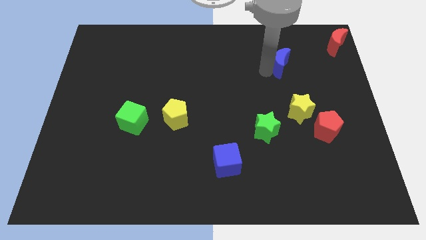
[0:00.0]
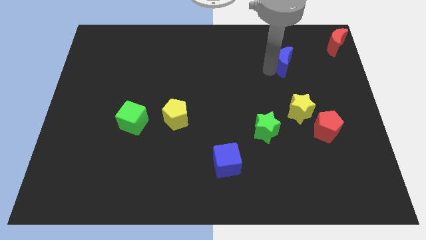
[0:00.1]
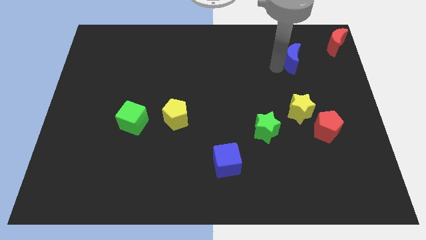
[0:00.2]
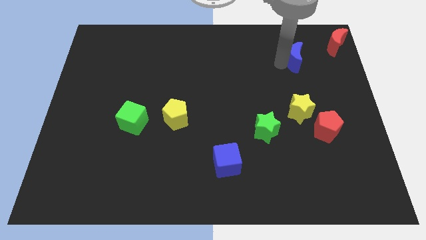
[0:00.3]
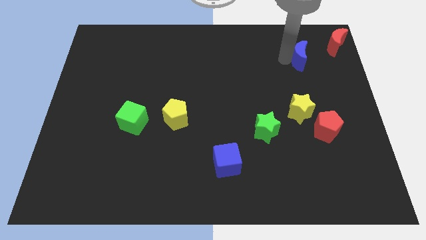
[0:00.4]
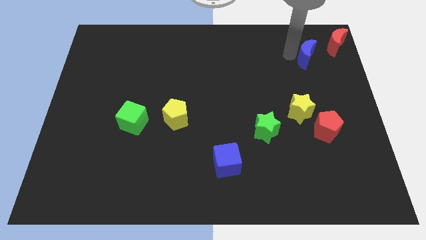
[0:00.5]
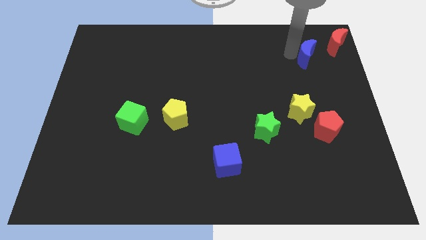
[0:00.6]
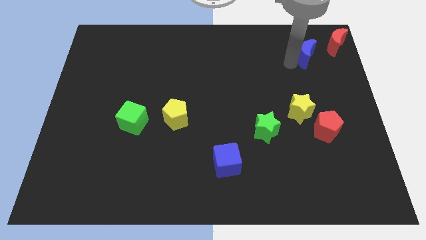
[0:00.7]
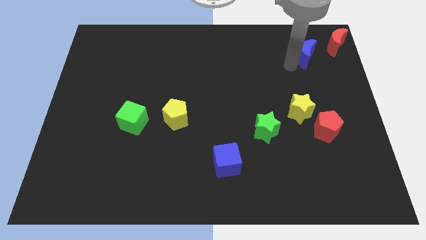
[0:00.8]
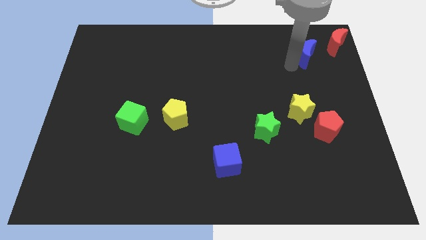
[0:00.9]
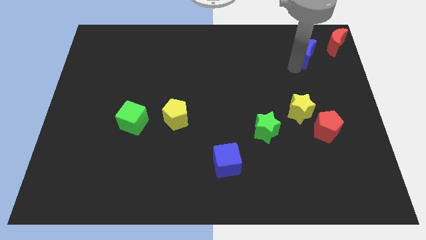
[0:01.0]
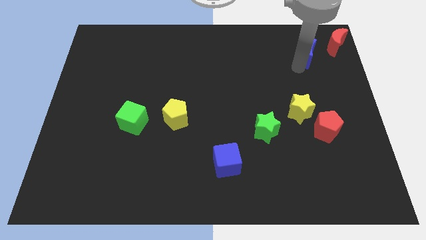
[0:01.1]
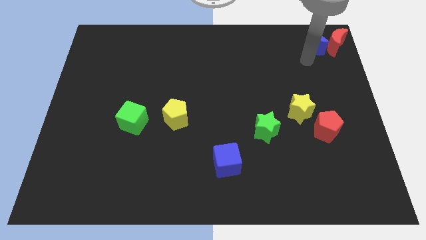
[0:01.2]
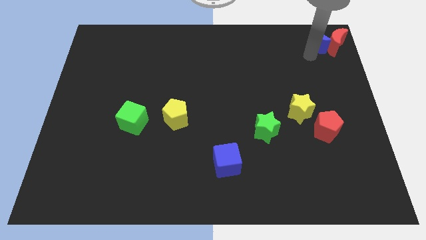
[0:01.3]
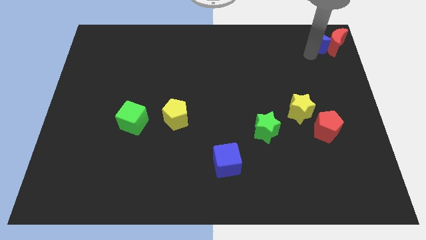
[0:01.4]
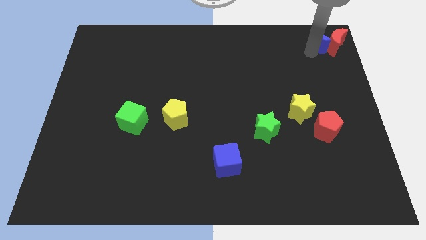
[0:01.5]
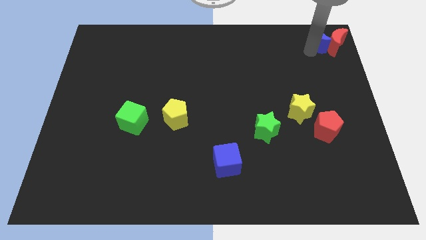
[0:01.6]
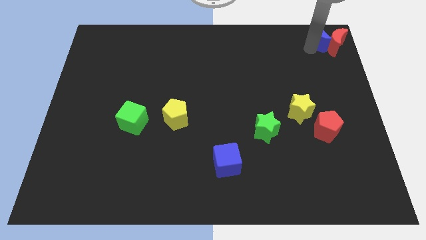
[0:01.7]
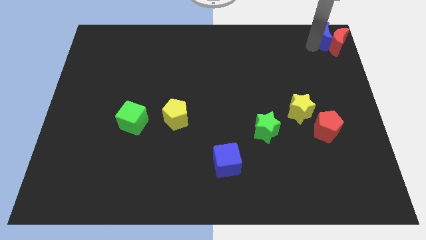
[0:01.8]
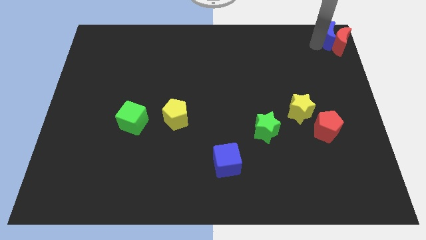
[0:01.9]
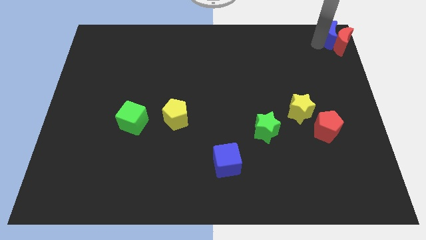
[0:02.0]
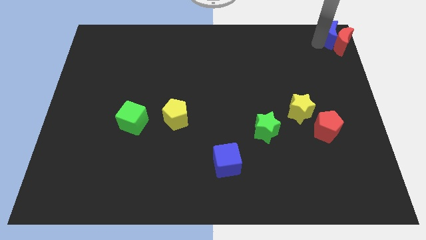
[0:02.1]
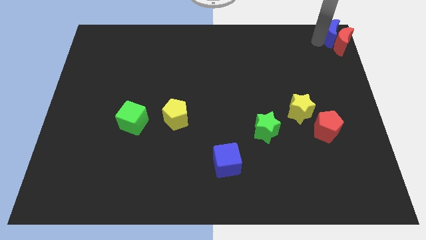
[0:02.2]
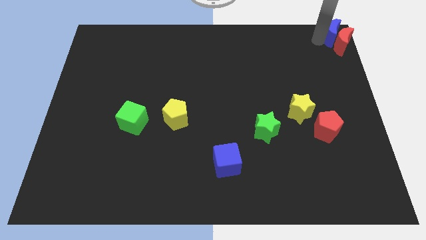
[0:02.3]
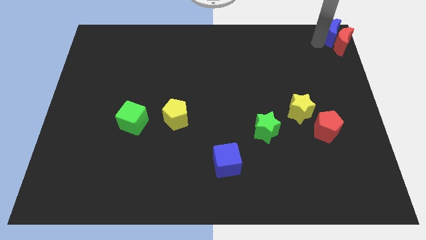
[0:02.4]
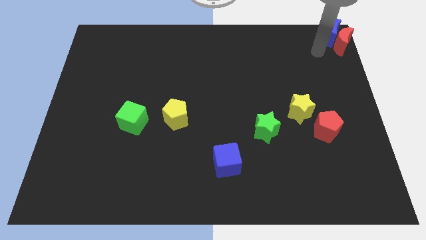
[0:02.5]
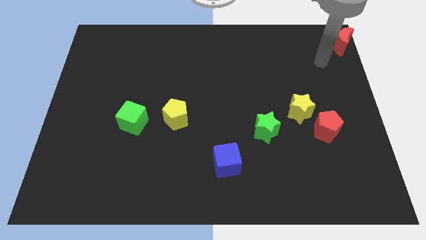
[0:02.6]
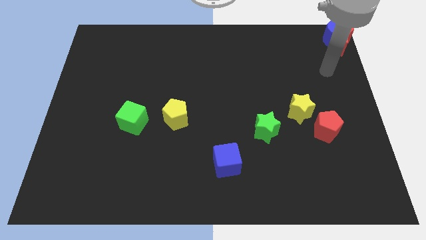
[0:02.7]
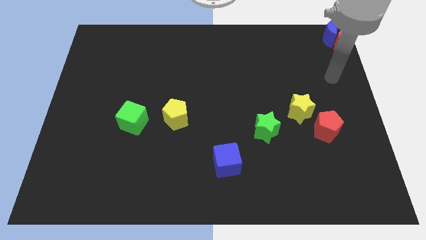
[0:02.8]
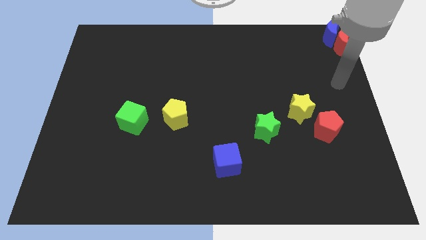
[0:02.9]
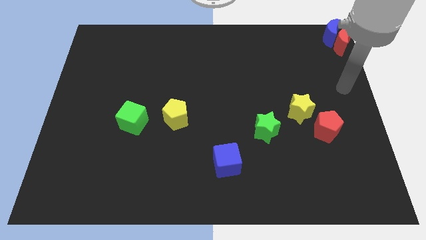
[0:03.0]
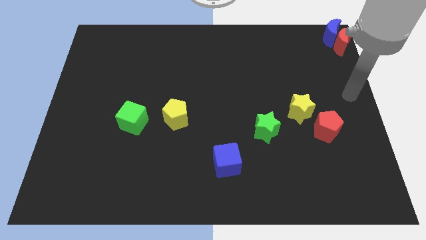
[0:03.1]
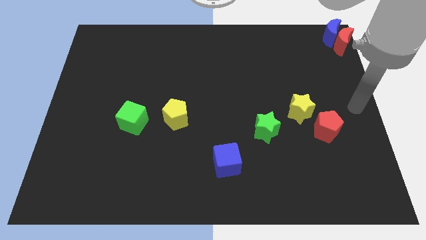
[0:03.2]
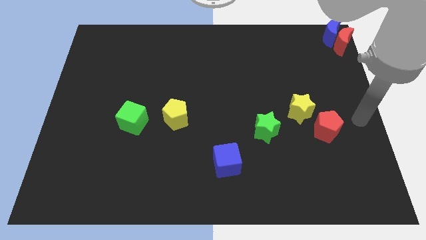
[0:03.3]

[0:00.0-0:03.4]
move the blue moon into the red moon

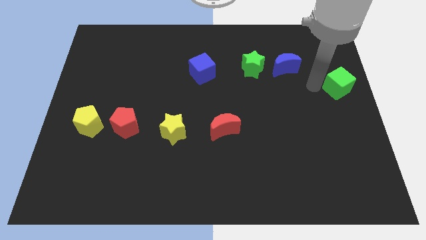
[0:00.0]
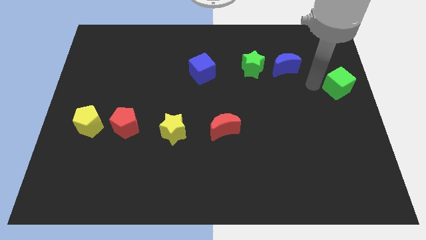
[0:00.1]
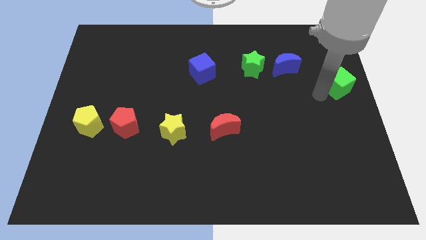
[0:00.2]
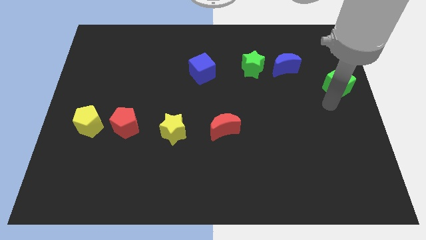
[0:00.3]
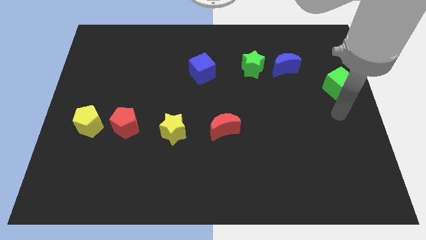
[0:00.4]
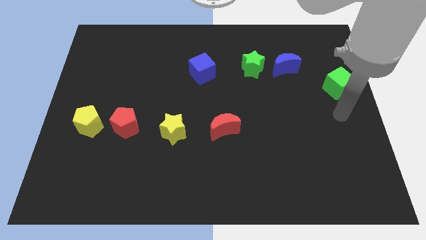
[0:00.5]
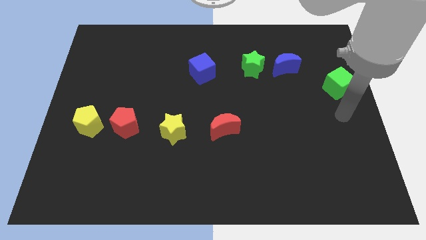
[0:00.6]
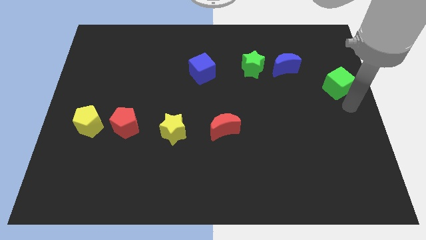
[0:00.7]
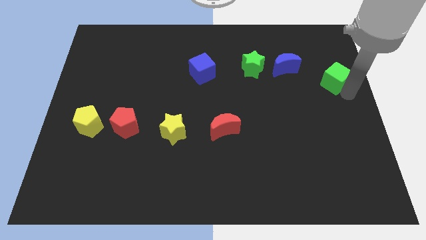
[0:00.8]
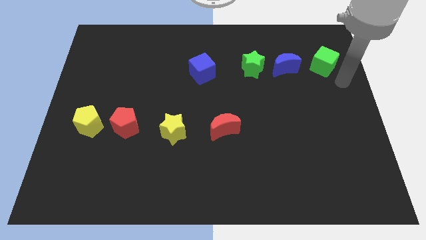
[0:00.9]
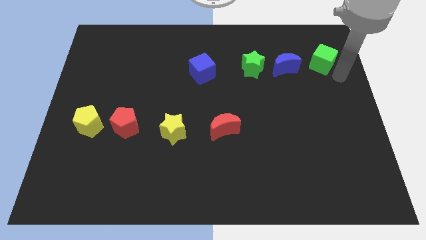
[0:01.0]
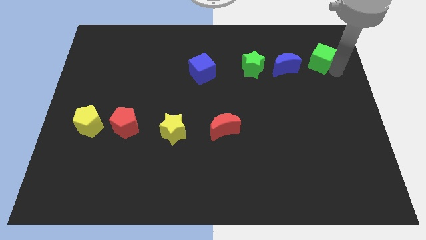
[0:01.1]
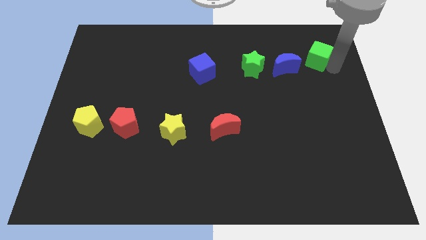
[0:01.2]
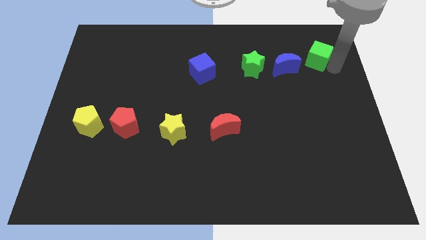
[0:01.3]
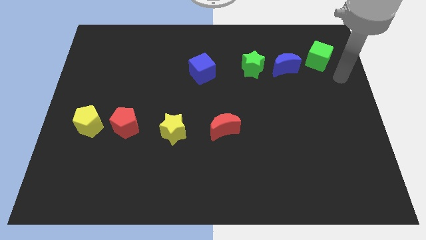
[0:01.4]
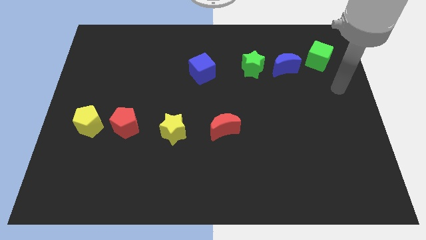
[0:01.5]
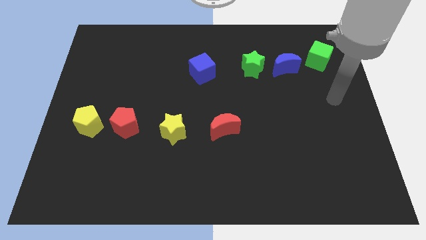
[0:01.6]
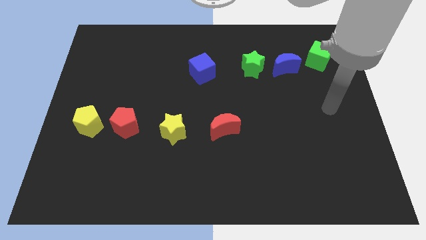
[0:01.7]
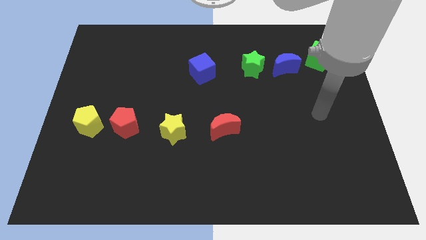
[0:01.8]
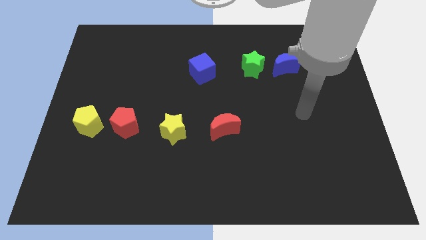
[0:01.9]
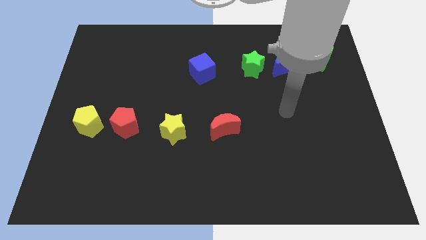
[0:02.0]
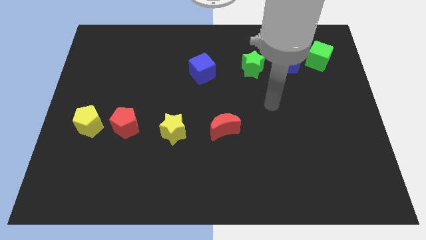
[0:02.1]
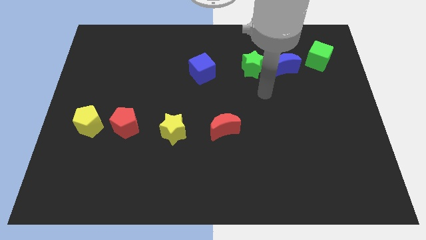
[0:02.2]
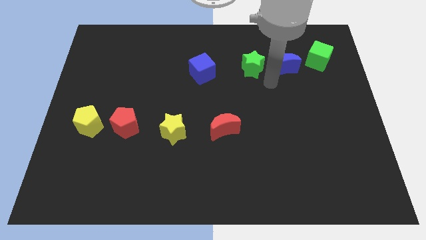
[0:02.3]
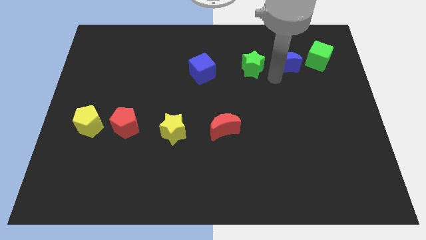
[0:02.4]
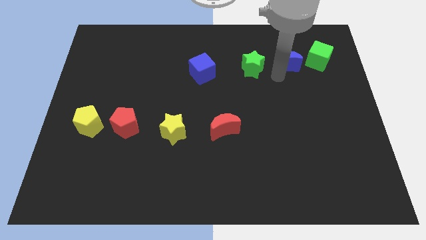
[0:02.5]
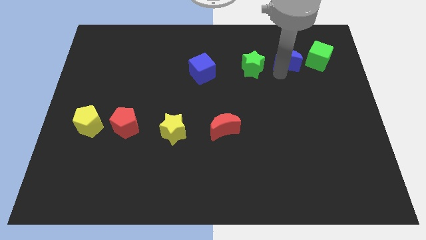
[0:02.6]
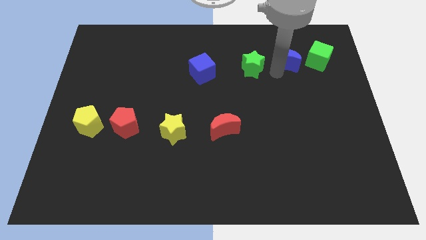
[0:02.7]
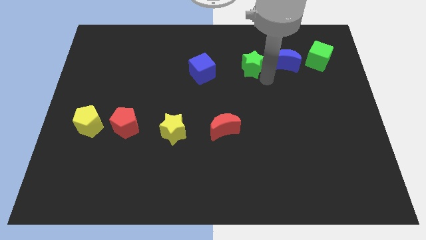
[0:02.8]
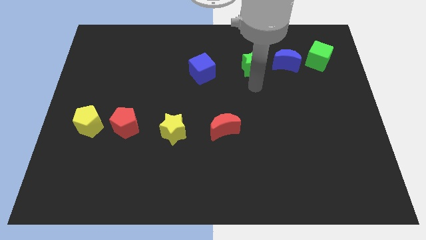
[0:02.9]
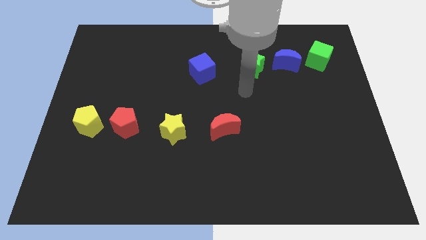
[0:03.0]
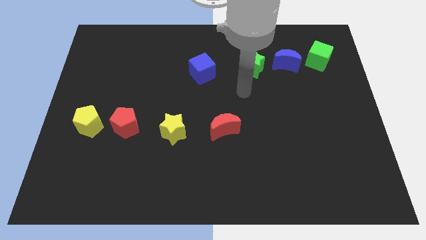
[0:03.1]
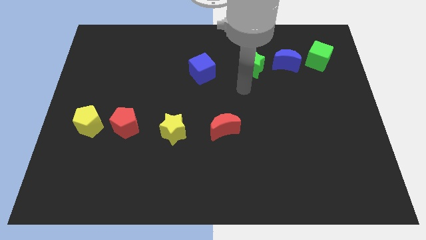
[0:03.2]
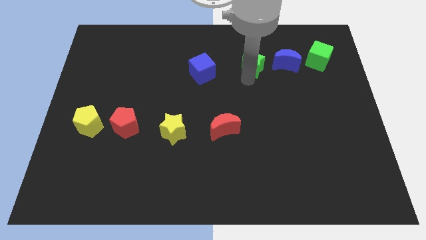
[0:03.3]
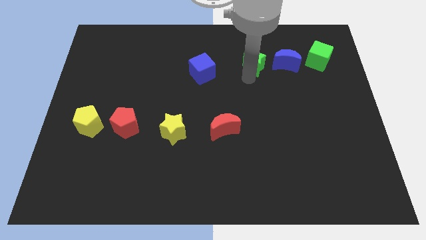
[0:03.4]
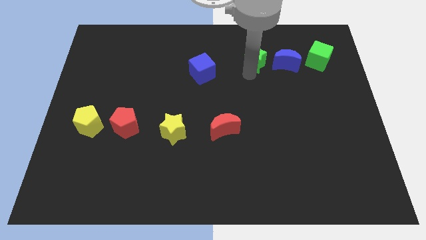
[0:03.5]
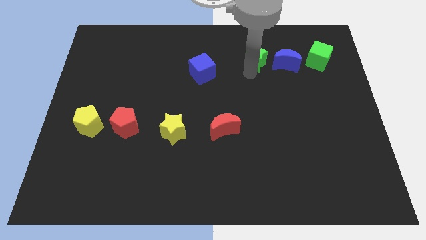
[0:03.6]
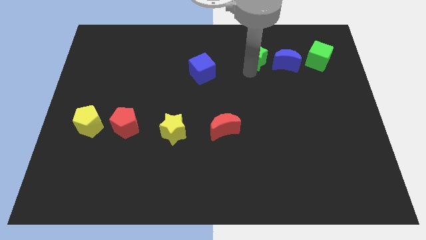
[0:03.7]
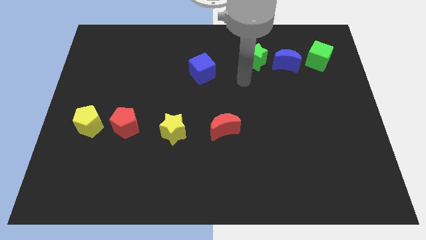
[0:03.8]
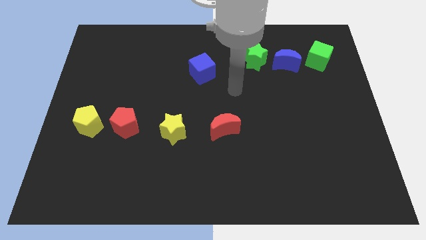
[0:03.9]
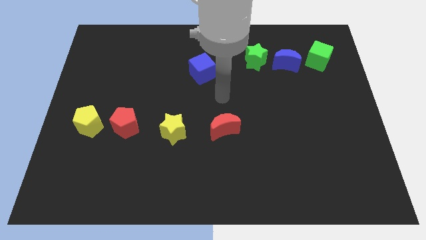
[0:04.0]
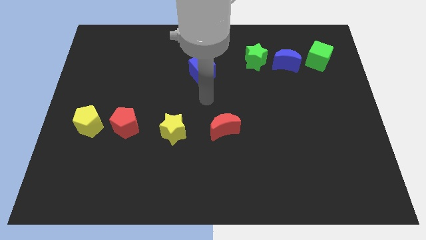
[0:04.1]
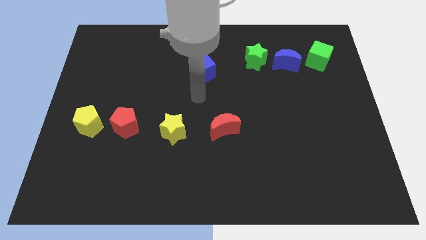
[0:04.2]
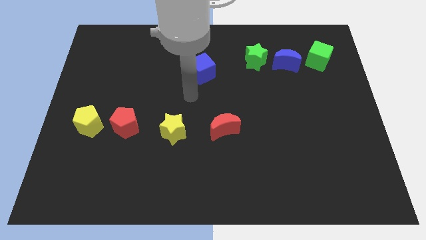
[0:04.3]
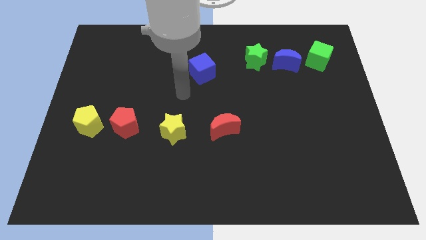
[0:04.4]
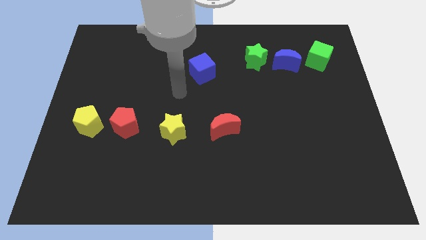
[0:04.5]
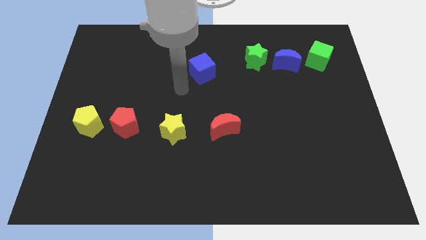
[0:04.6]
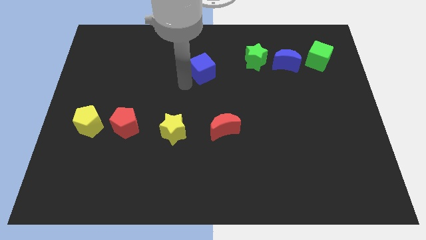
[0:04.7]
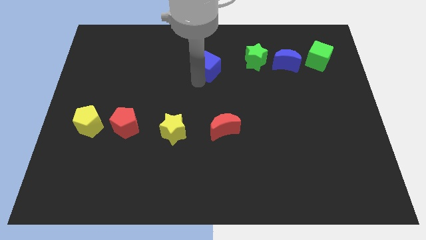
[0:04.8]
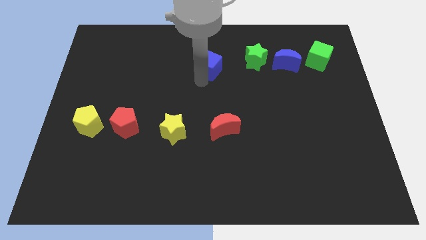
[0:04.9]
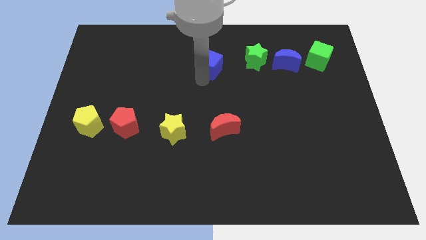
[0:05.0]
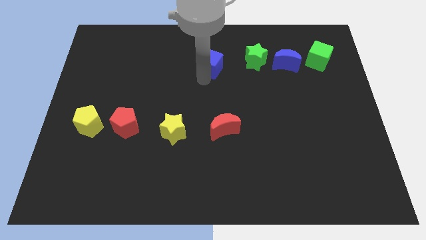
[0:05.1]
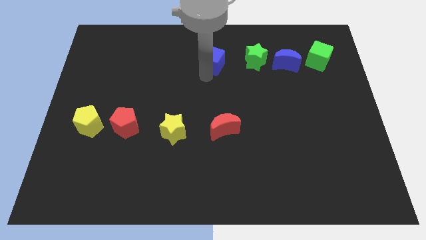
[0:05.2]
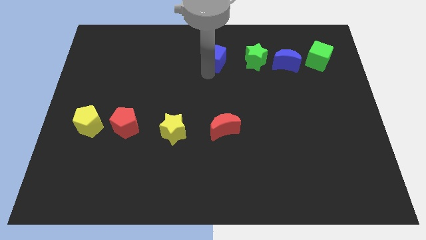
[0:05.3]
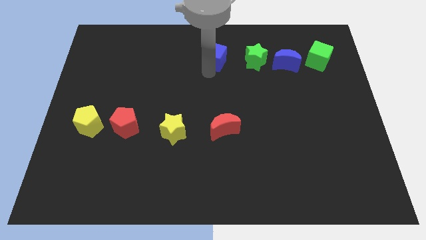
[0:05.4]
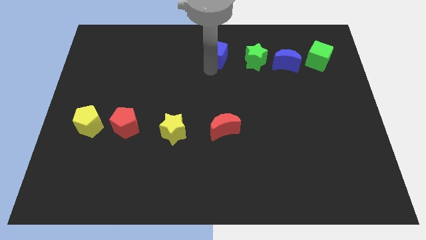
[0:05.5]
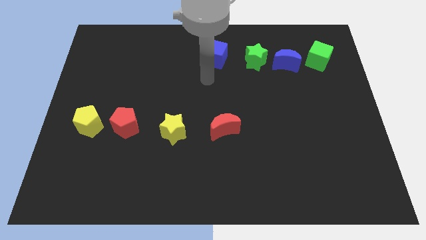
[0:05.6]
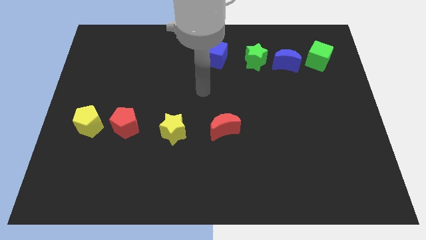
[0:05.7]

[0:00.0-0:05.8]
form a horizontal line with the group of blocks near the top side of the board
